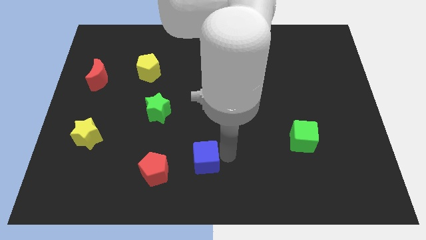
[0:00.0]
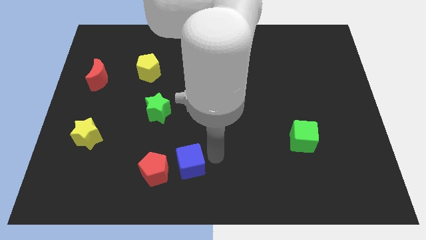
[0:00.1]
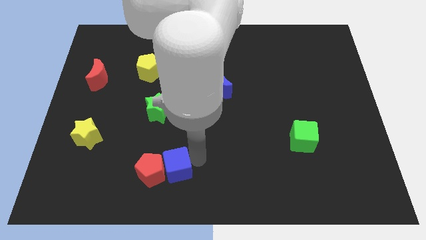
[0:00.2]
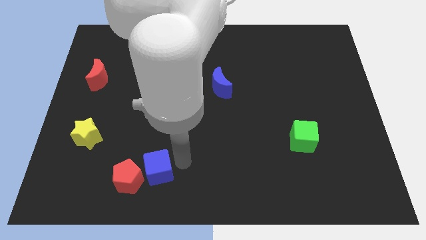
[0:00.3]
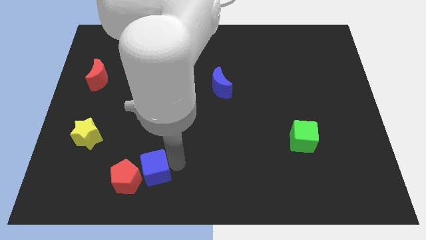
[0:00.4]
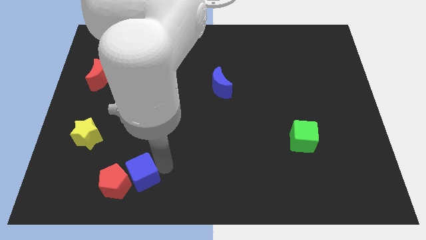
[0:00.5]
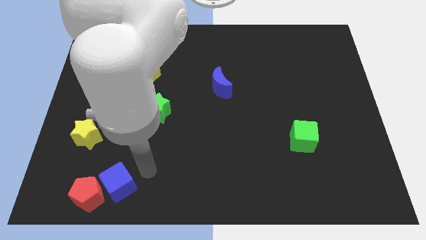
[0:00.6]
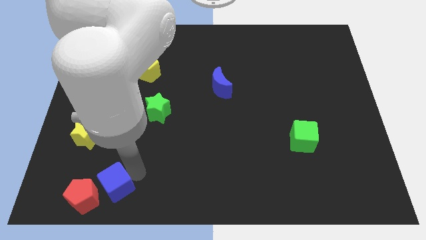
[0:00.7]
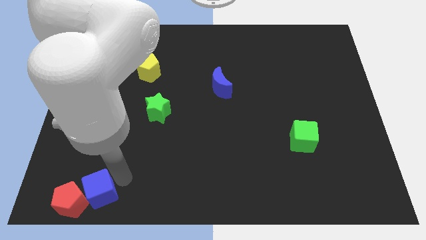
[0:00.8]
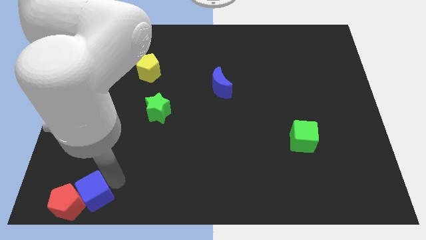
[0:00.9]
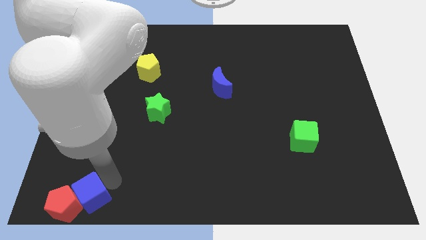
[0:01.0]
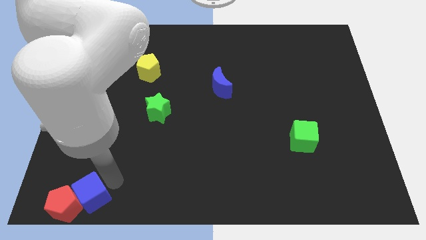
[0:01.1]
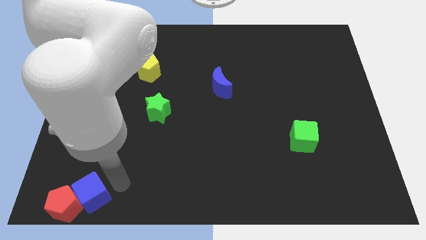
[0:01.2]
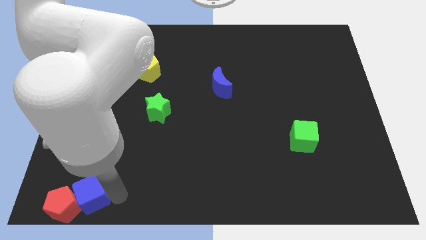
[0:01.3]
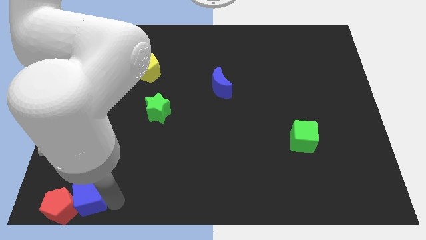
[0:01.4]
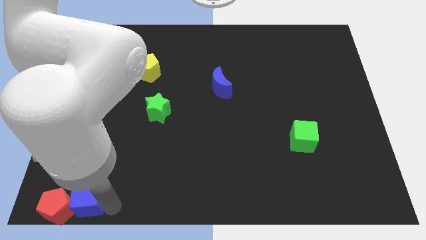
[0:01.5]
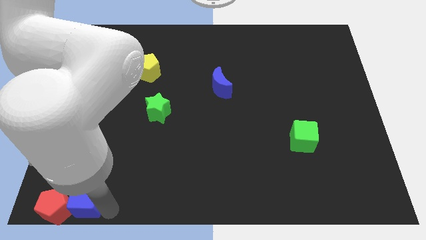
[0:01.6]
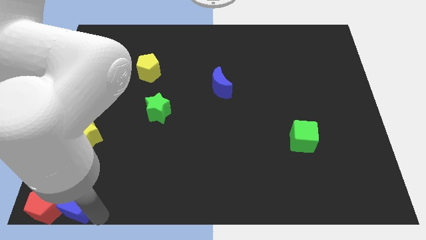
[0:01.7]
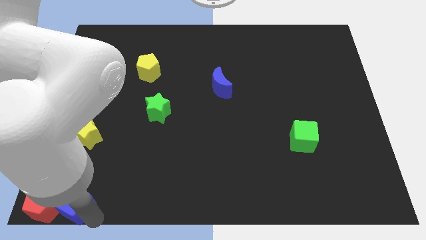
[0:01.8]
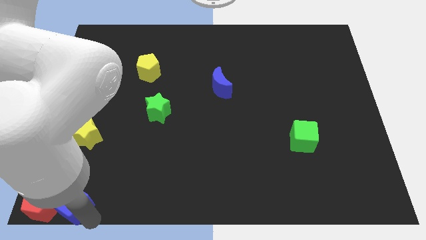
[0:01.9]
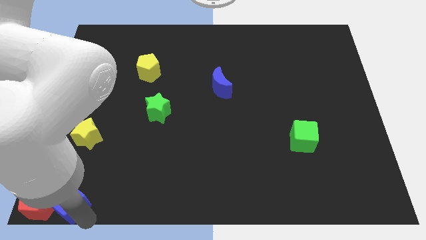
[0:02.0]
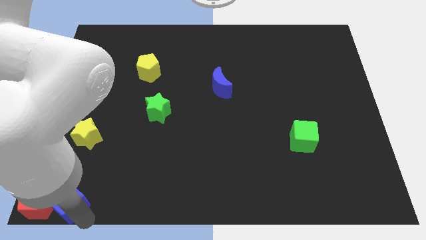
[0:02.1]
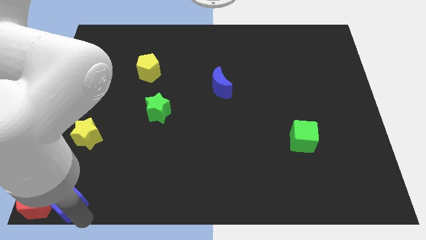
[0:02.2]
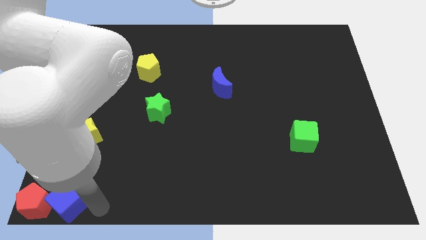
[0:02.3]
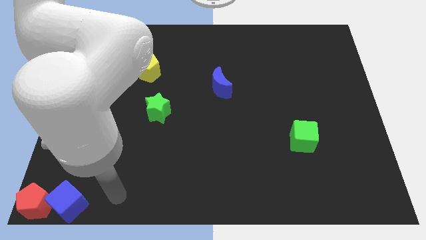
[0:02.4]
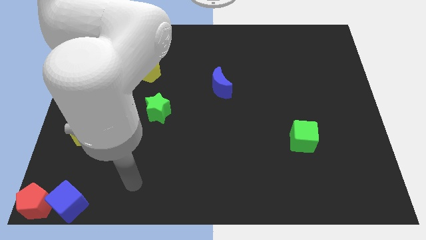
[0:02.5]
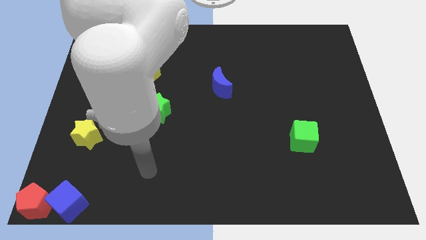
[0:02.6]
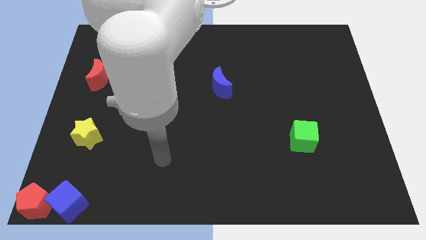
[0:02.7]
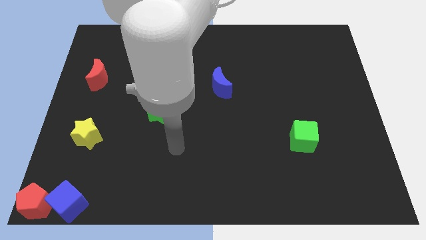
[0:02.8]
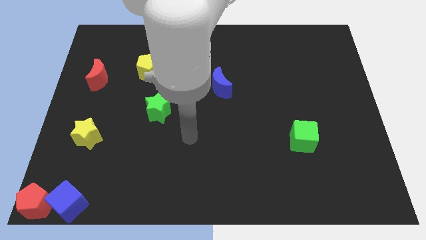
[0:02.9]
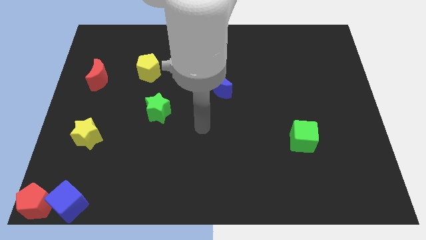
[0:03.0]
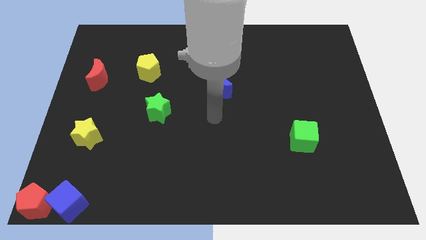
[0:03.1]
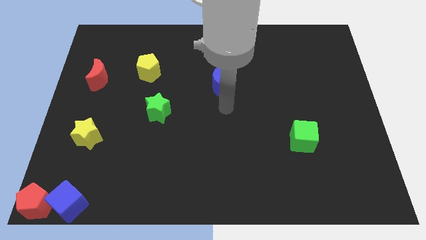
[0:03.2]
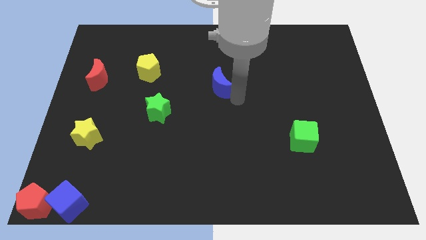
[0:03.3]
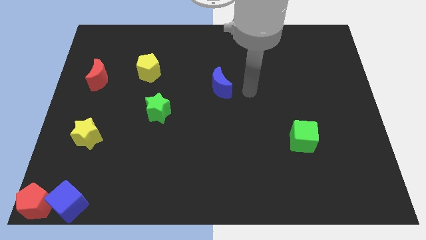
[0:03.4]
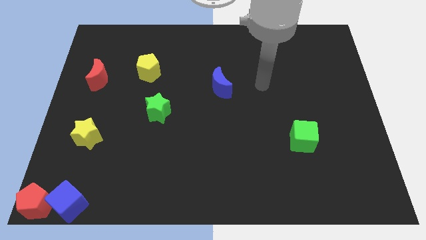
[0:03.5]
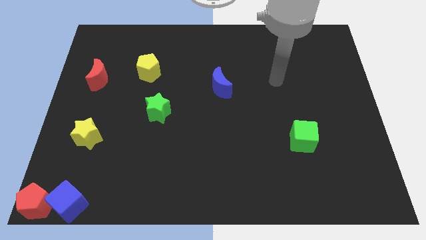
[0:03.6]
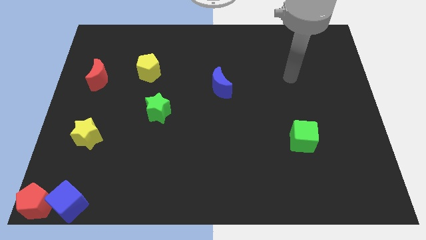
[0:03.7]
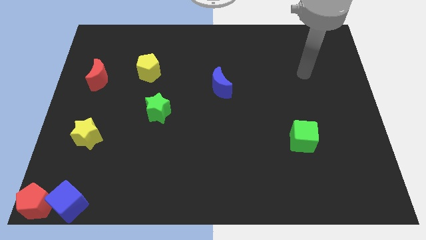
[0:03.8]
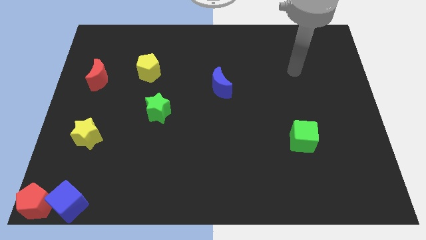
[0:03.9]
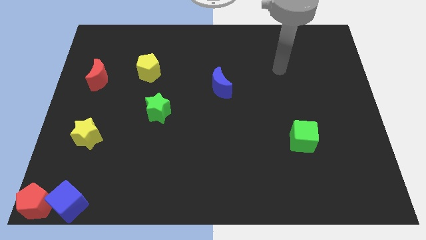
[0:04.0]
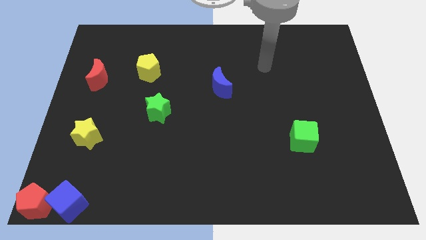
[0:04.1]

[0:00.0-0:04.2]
place the blue cube and red pentagon to the bottom left corner of the board

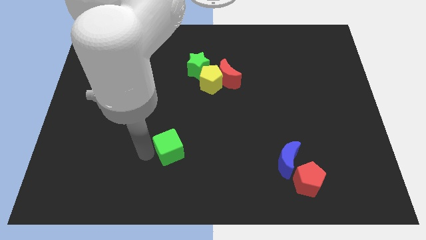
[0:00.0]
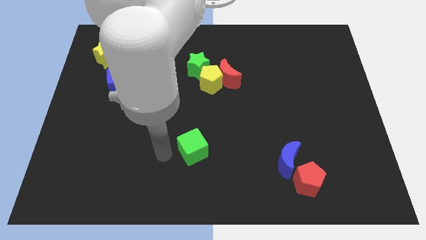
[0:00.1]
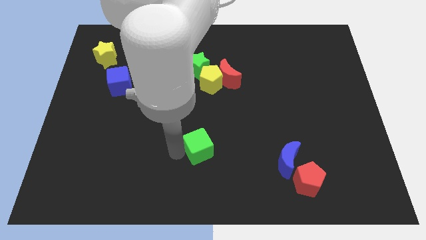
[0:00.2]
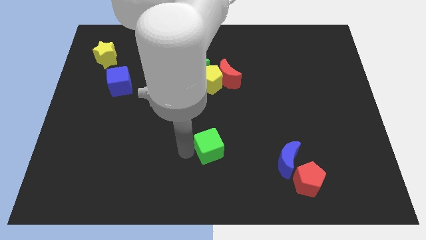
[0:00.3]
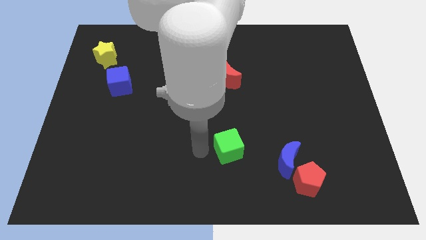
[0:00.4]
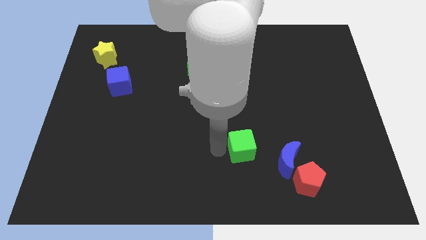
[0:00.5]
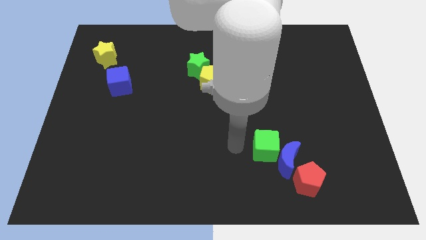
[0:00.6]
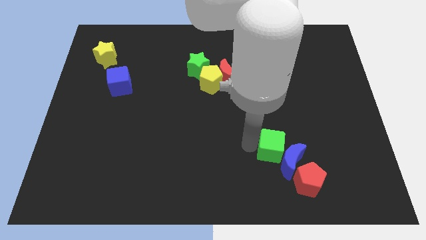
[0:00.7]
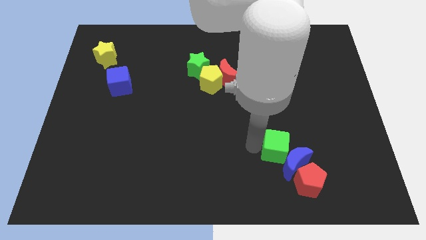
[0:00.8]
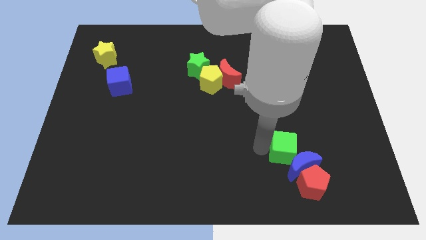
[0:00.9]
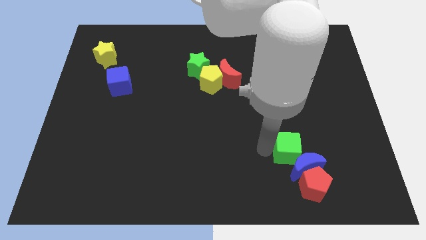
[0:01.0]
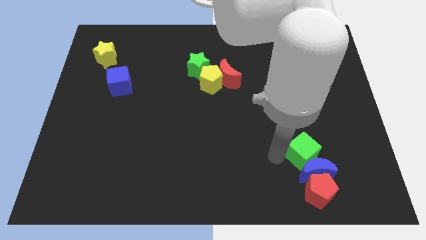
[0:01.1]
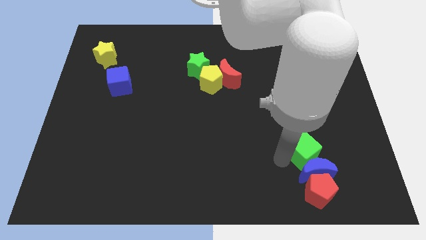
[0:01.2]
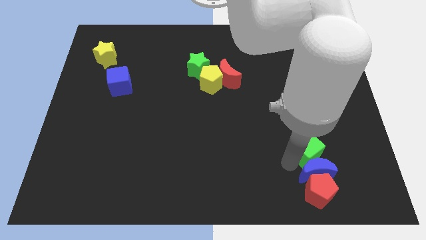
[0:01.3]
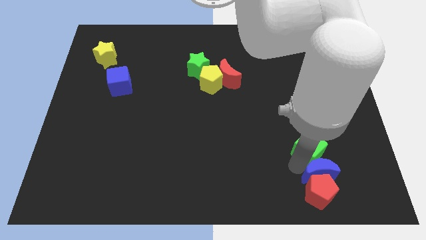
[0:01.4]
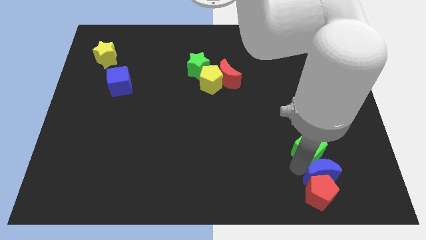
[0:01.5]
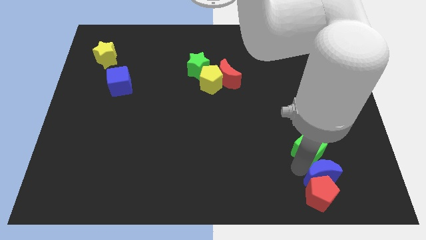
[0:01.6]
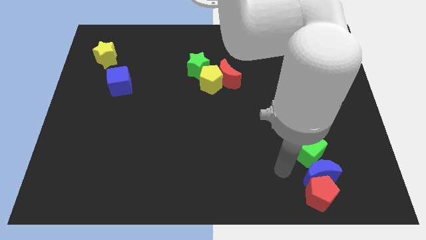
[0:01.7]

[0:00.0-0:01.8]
move the green cube into the blue crescent

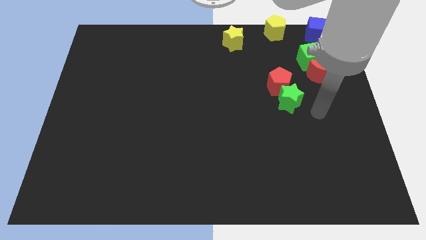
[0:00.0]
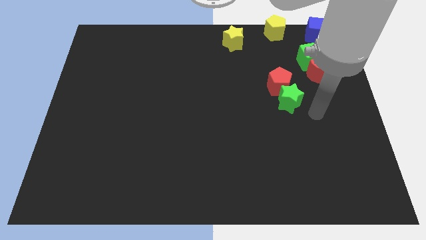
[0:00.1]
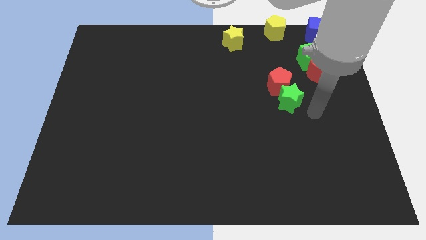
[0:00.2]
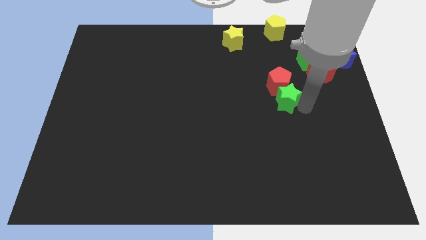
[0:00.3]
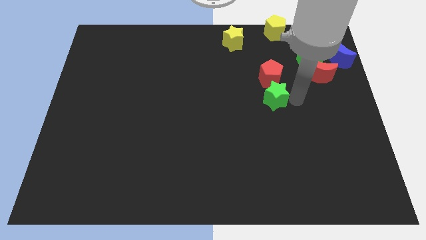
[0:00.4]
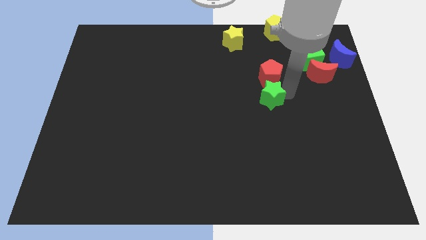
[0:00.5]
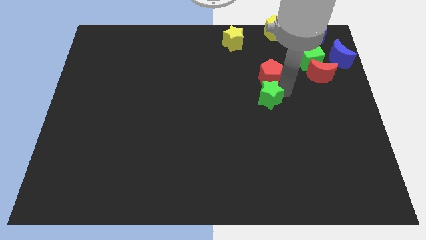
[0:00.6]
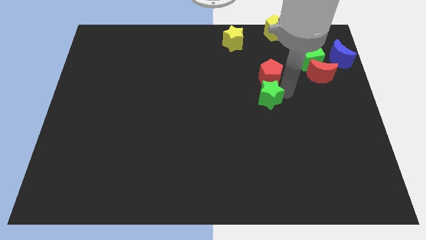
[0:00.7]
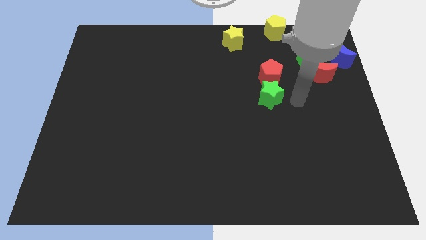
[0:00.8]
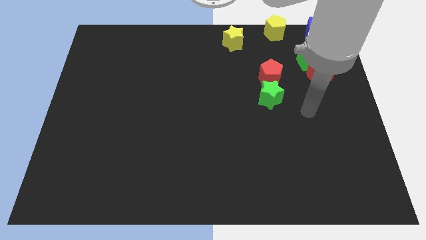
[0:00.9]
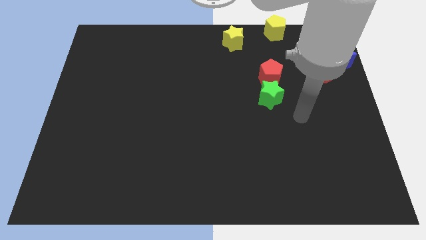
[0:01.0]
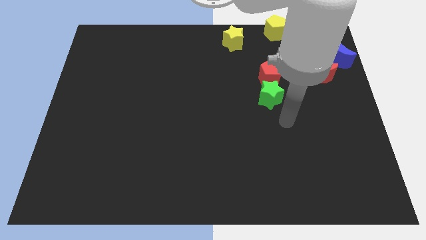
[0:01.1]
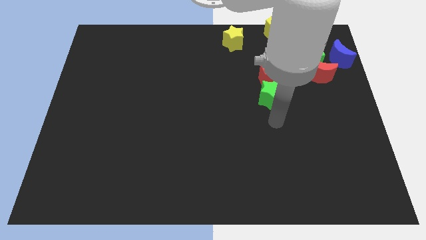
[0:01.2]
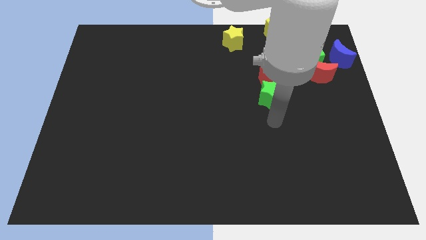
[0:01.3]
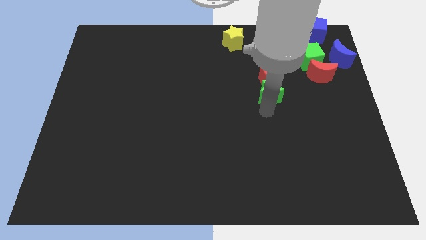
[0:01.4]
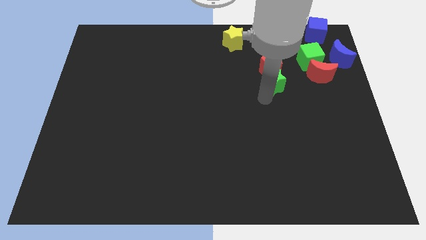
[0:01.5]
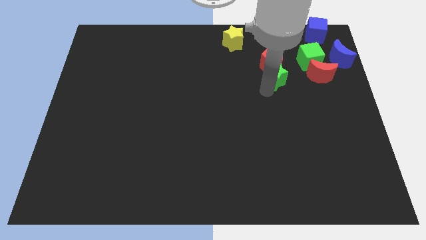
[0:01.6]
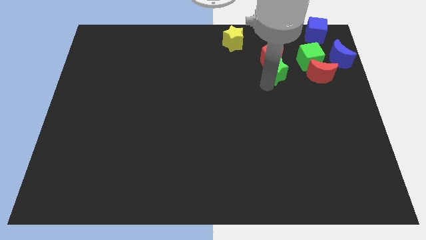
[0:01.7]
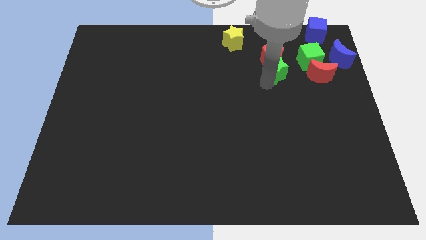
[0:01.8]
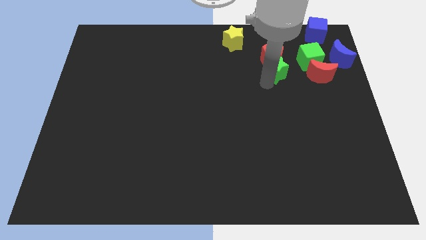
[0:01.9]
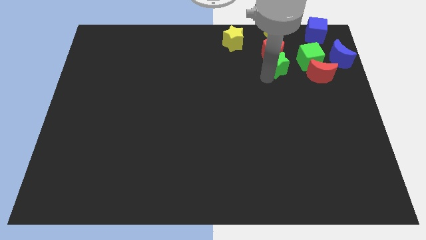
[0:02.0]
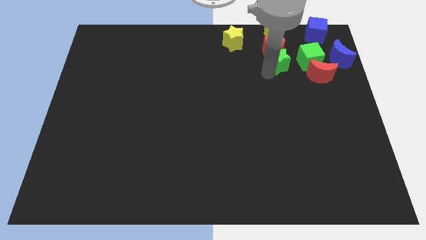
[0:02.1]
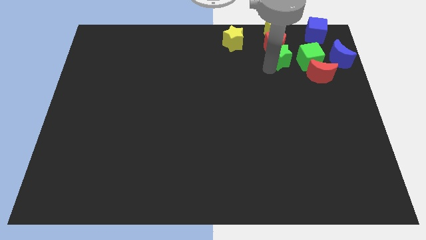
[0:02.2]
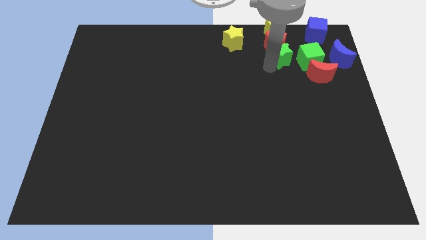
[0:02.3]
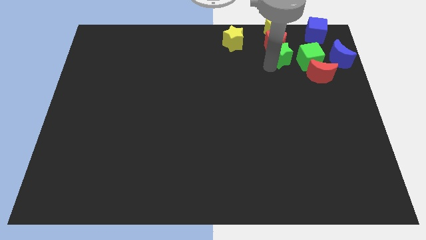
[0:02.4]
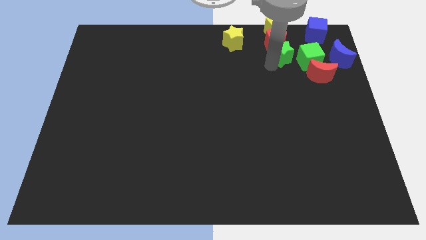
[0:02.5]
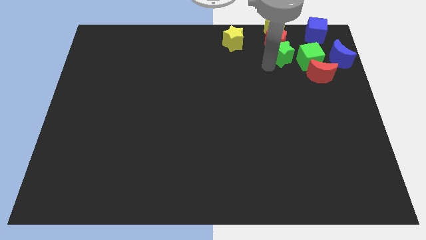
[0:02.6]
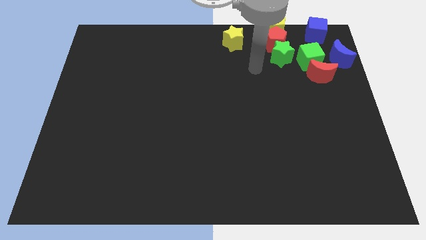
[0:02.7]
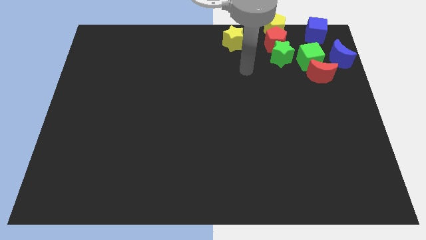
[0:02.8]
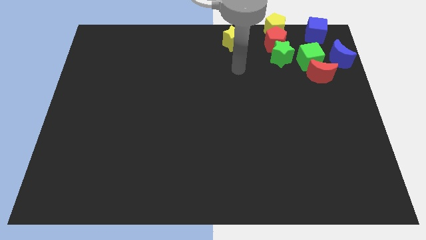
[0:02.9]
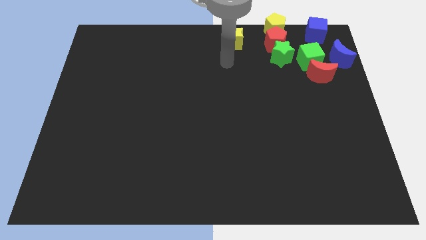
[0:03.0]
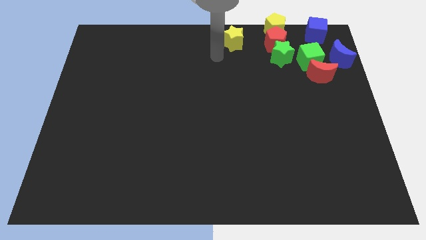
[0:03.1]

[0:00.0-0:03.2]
push the green star and red pentagon in an upward direction
